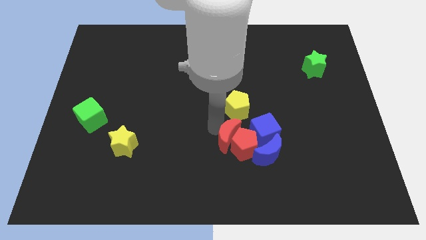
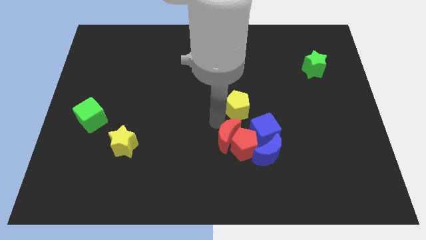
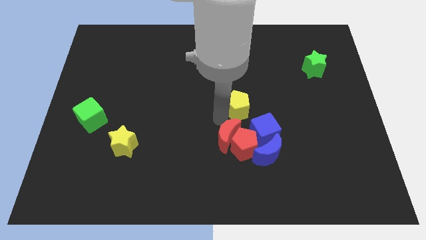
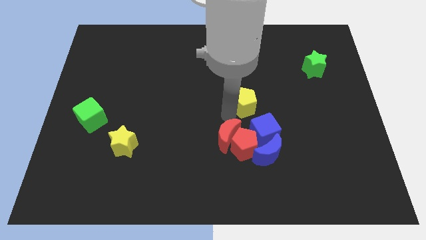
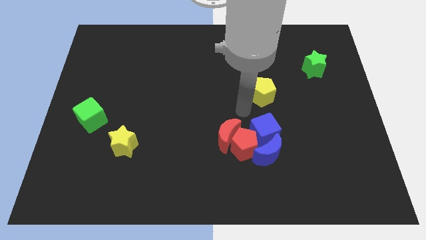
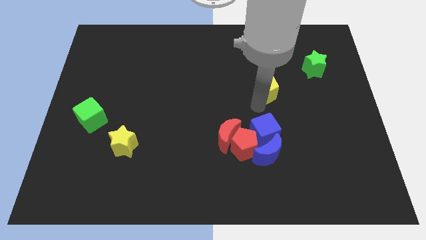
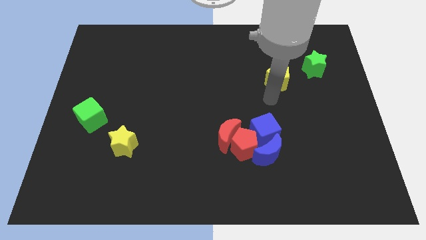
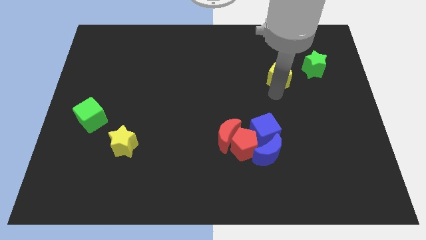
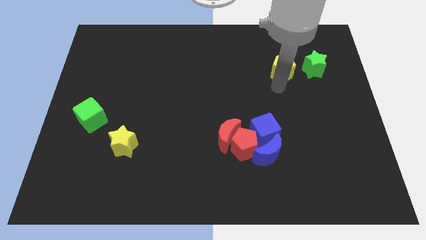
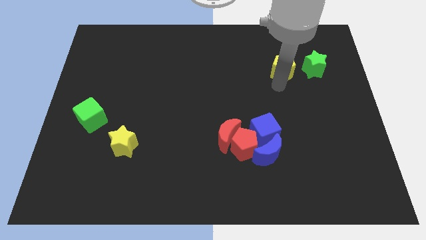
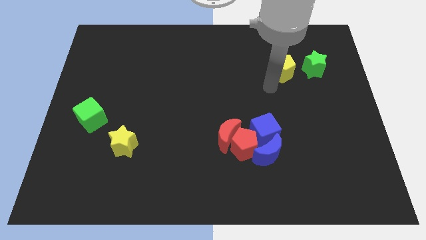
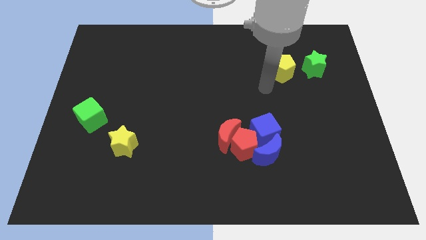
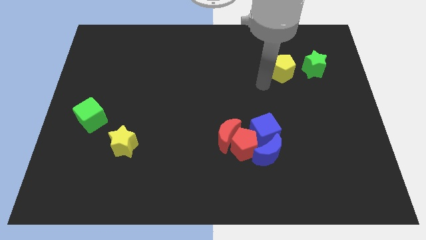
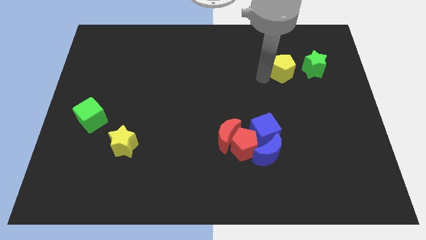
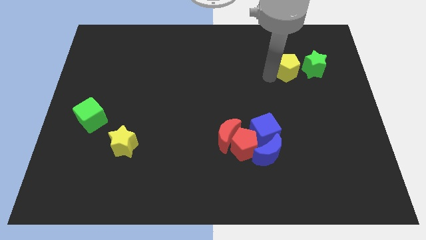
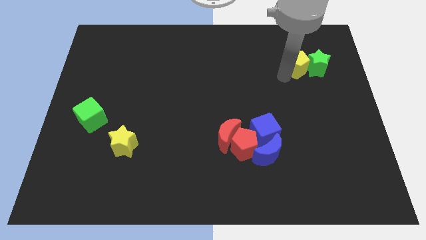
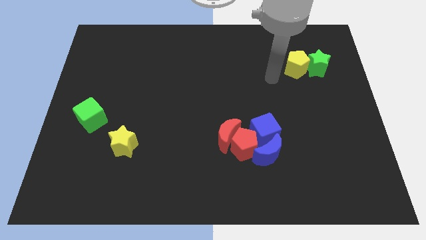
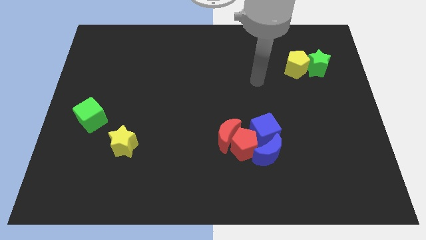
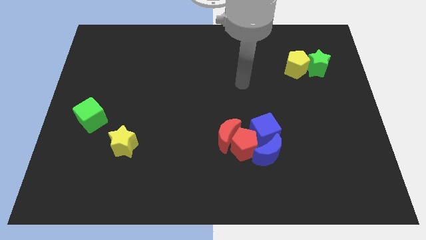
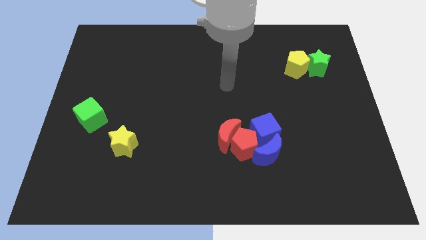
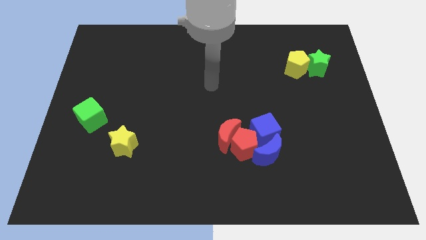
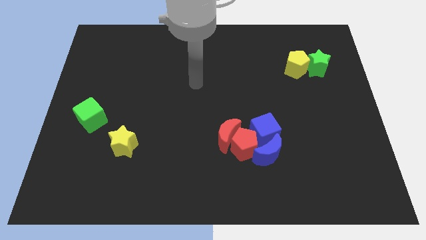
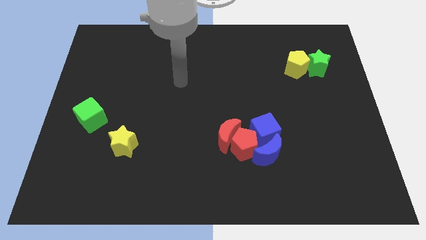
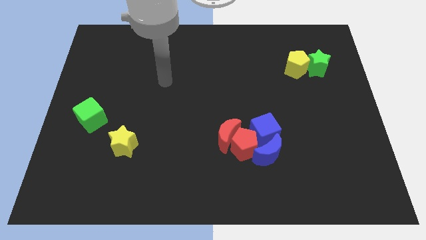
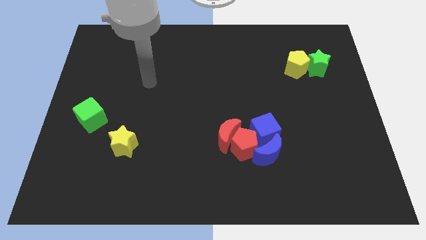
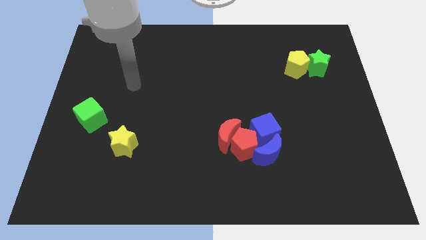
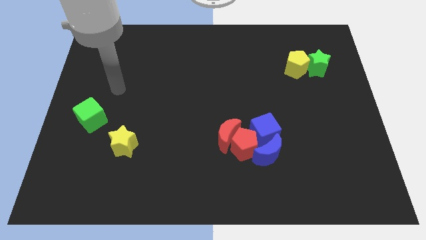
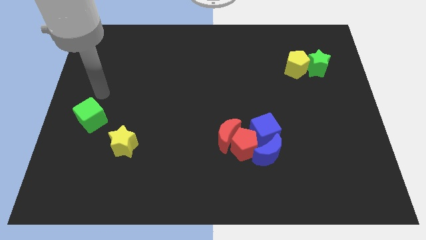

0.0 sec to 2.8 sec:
move the yellow pentagon into green star

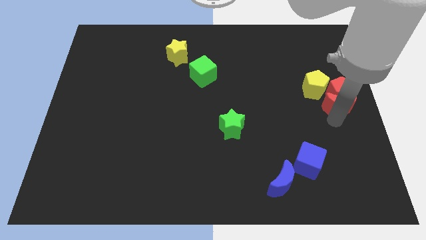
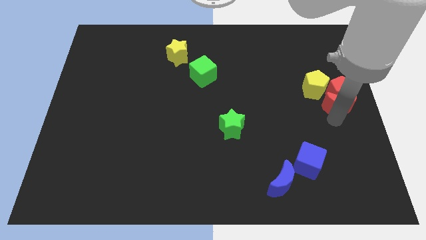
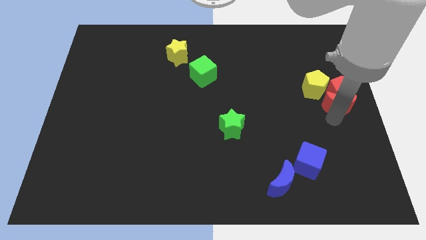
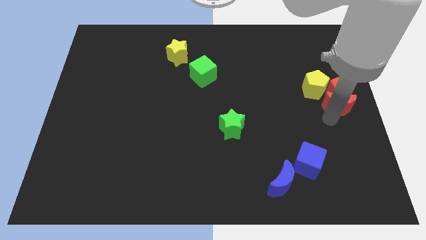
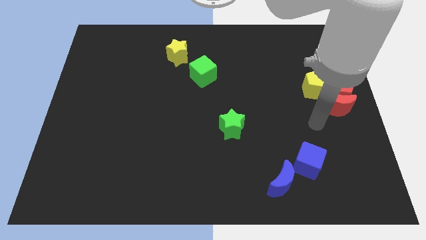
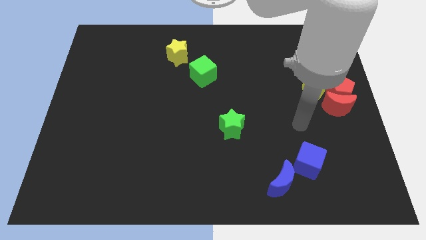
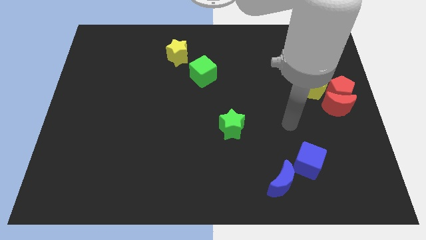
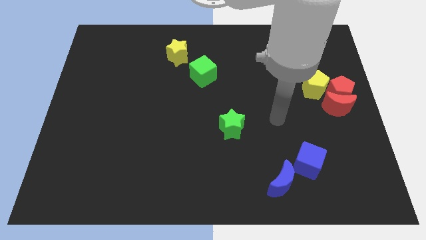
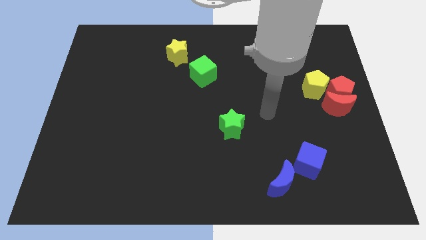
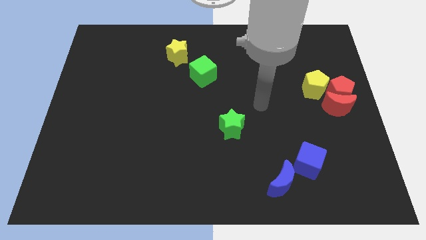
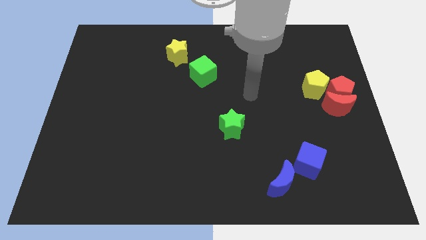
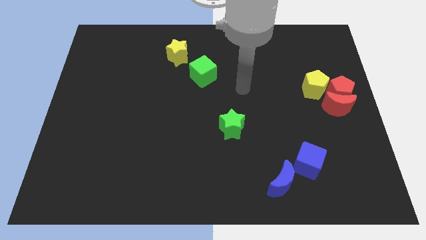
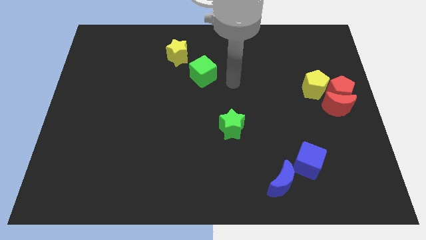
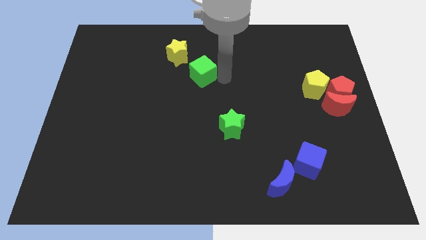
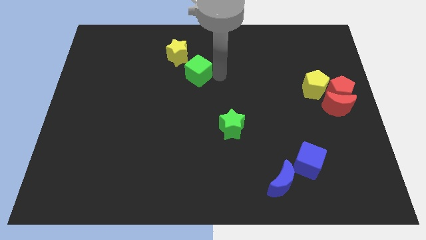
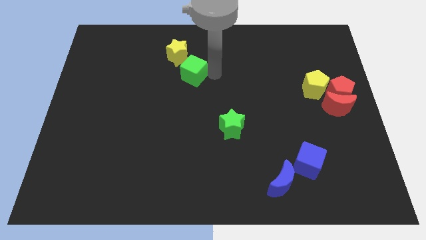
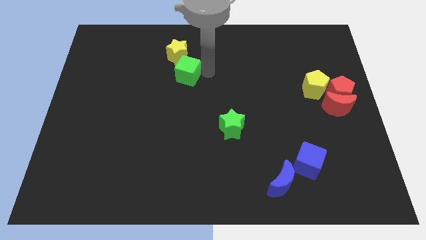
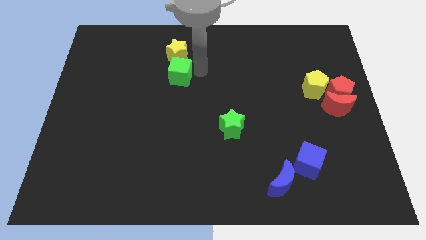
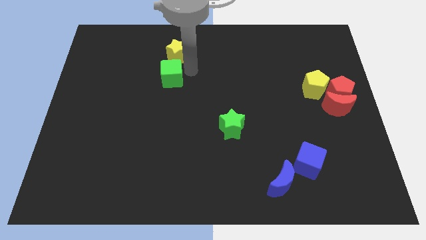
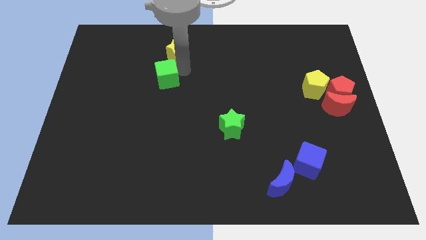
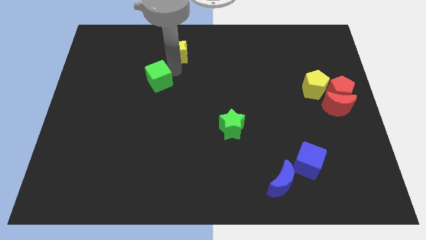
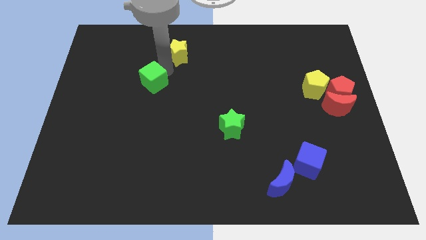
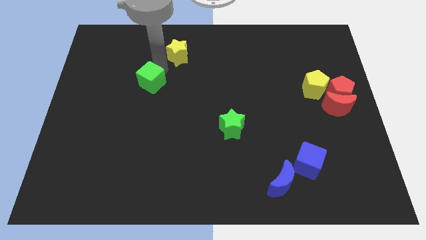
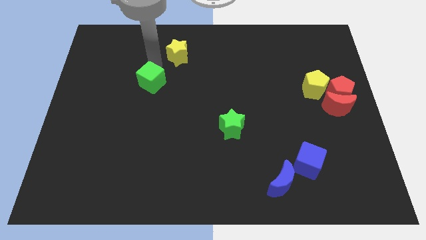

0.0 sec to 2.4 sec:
slightly move the green cube

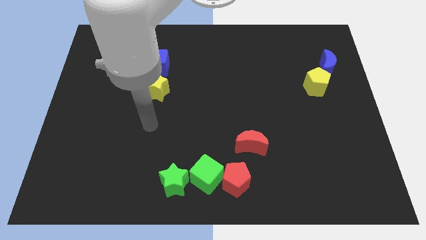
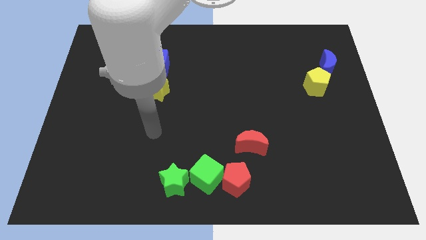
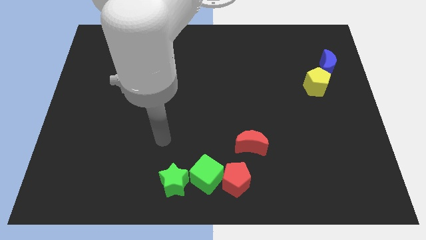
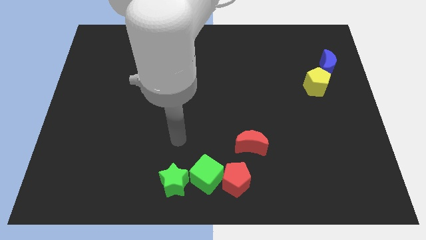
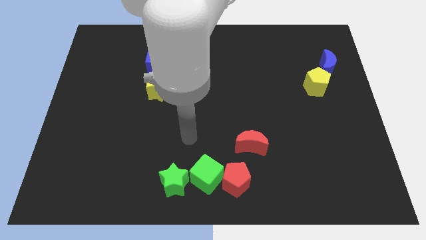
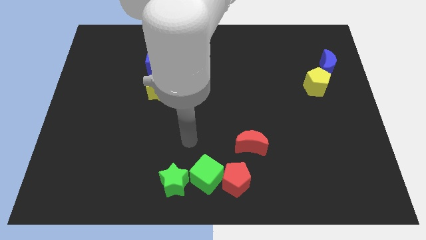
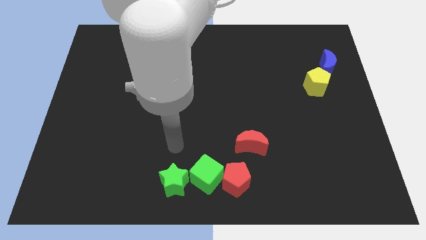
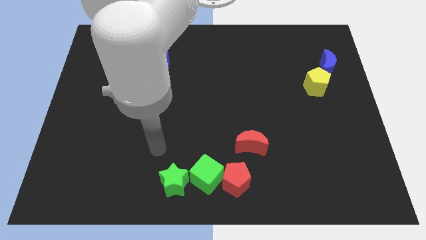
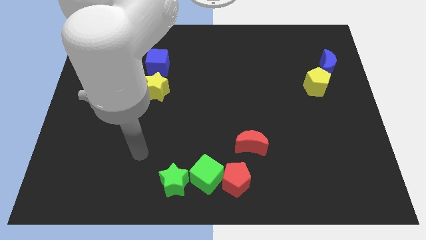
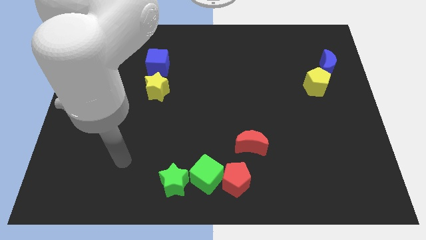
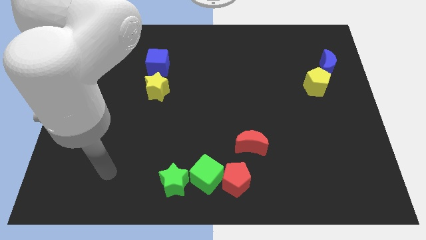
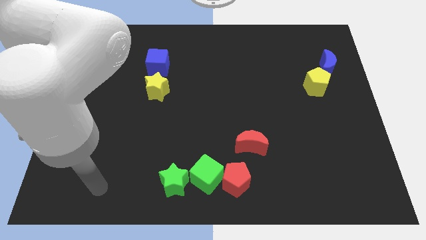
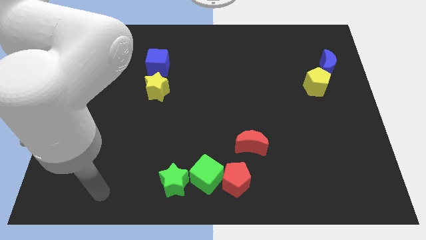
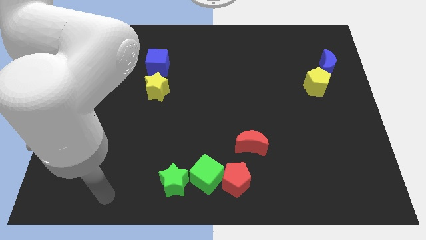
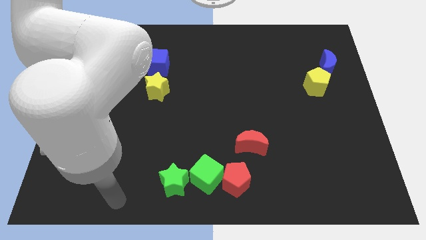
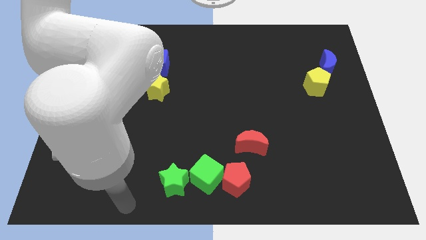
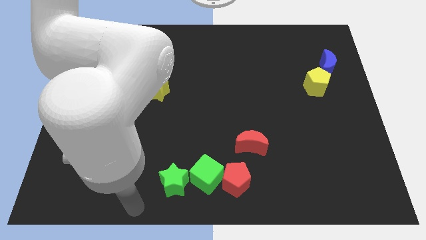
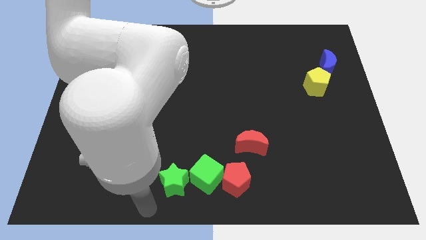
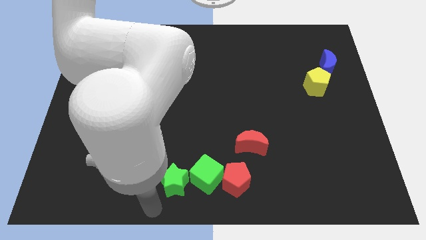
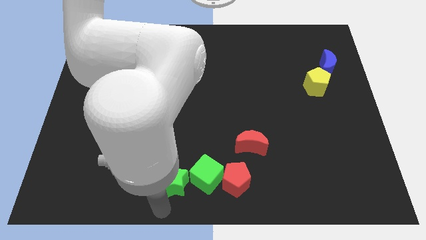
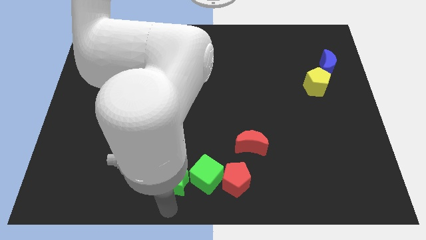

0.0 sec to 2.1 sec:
move your arm towards the bottom of the green star

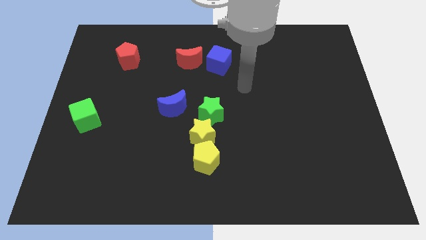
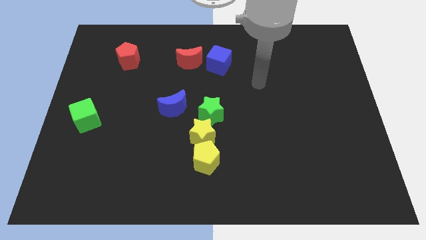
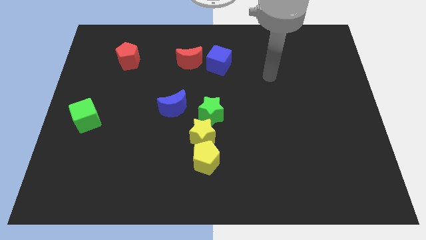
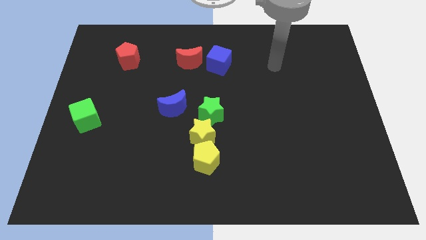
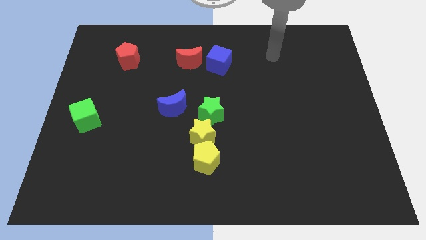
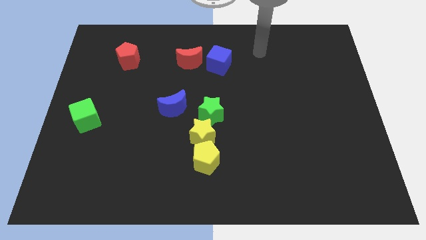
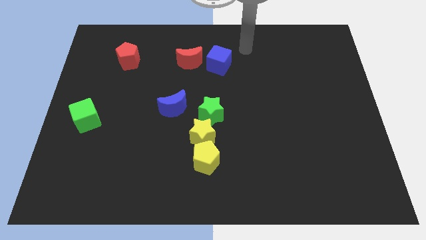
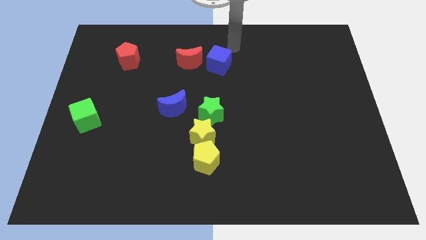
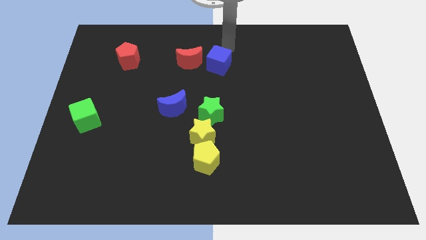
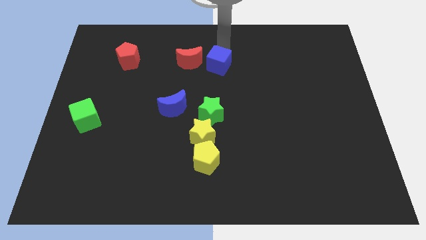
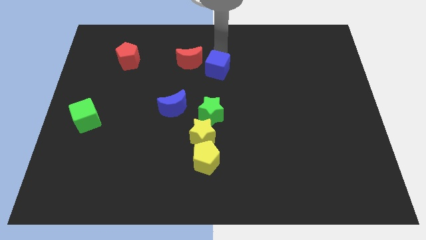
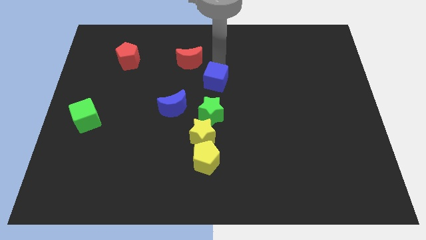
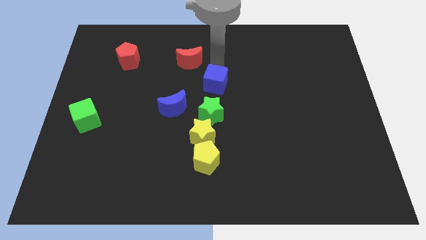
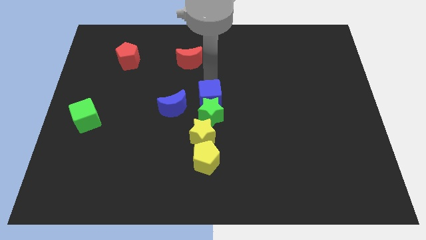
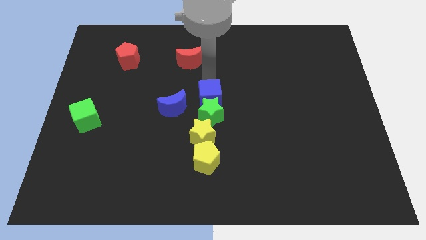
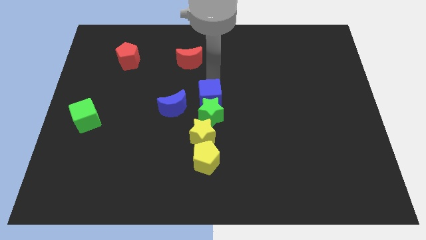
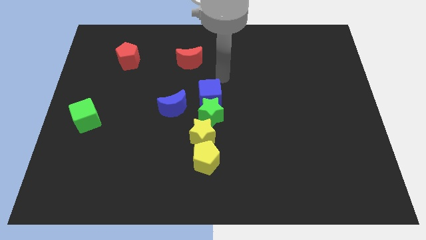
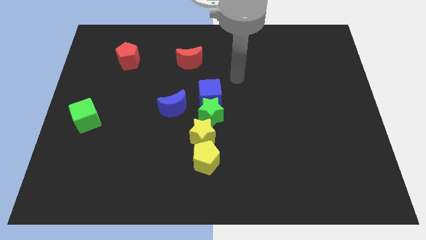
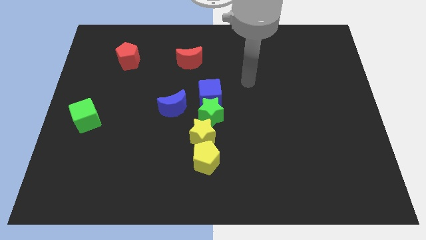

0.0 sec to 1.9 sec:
move the blue cube to the top side of the green star
